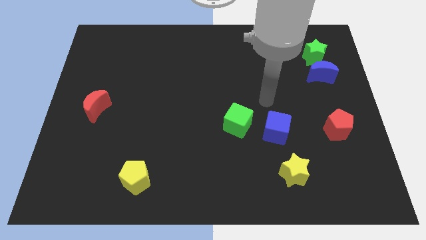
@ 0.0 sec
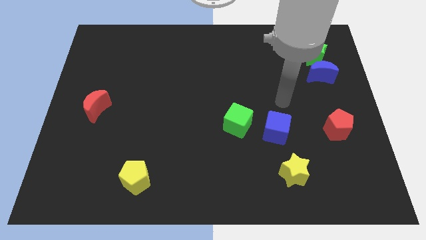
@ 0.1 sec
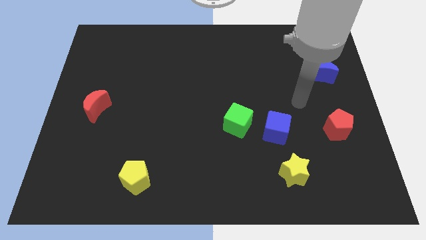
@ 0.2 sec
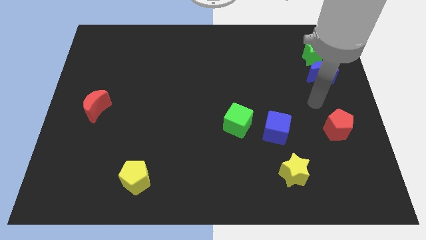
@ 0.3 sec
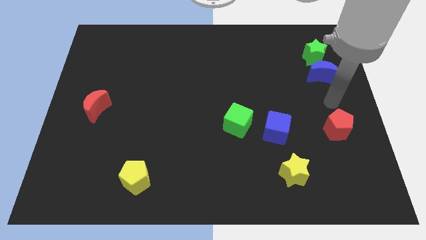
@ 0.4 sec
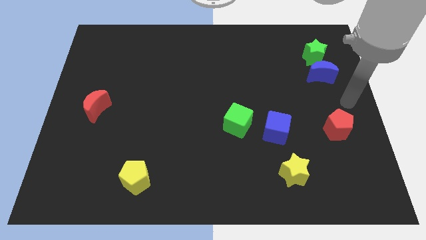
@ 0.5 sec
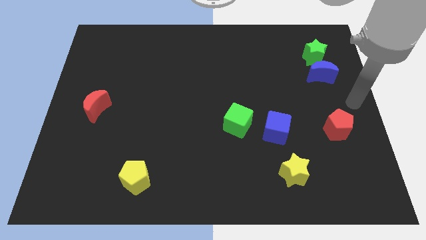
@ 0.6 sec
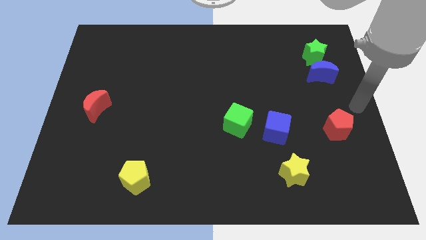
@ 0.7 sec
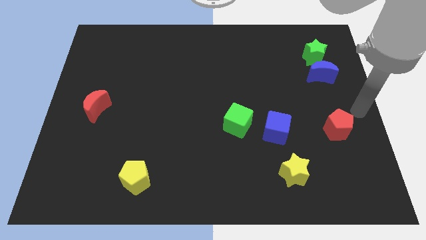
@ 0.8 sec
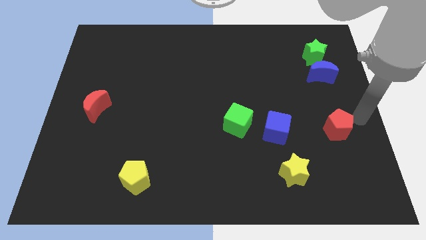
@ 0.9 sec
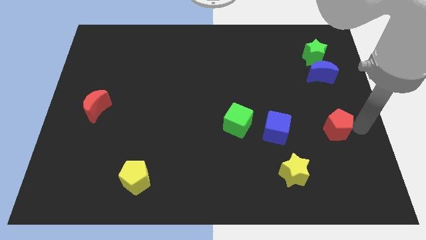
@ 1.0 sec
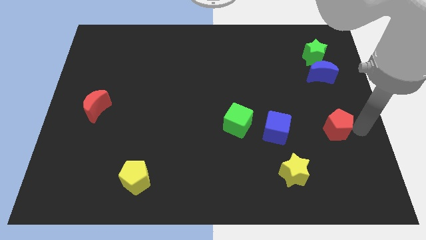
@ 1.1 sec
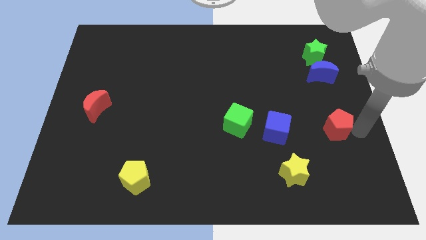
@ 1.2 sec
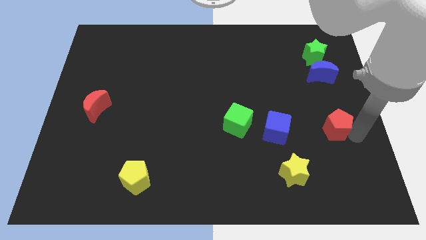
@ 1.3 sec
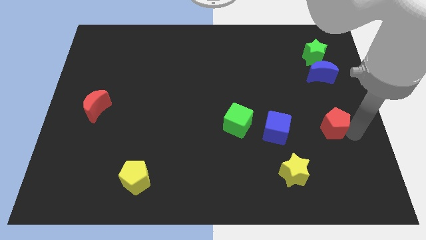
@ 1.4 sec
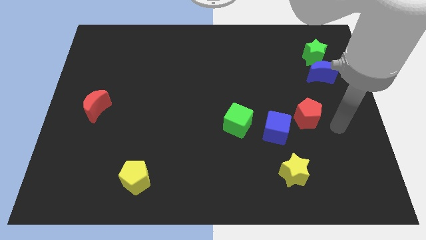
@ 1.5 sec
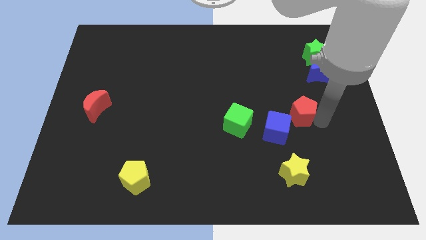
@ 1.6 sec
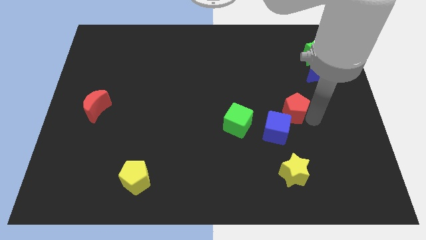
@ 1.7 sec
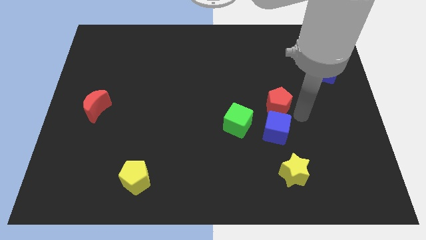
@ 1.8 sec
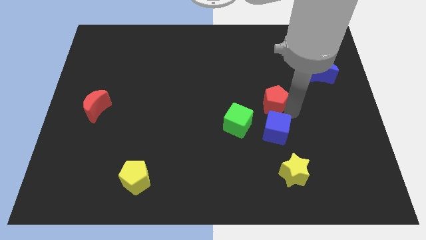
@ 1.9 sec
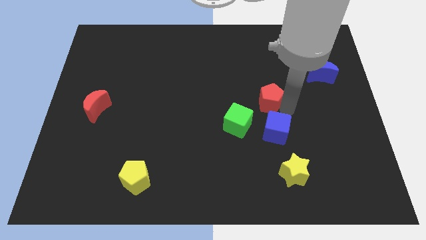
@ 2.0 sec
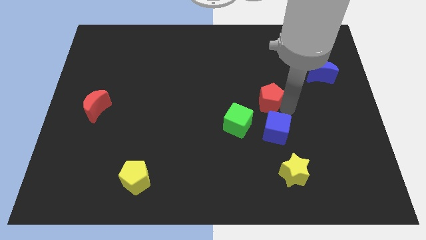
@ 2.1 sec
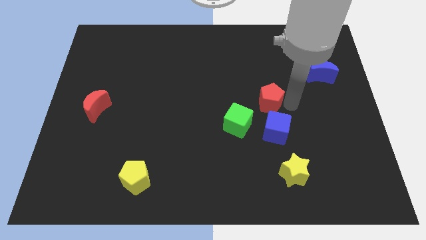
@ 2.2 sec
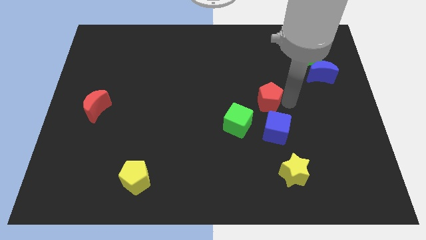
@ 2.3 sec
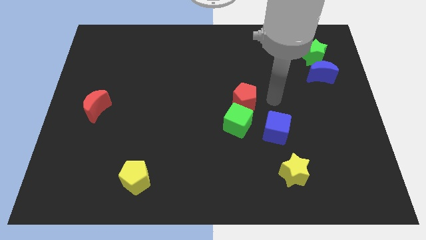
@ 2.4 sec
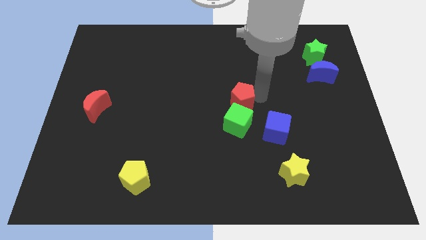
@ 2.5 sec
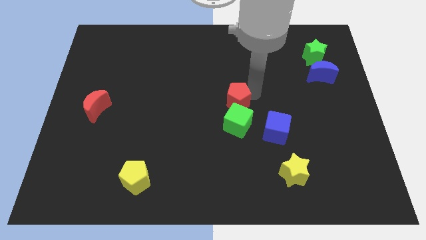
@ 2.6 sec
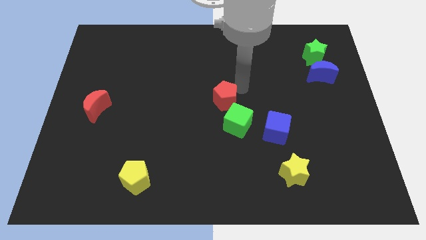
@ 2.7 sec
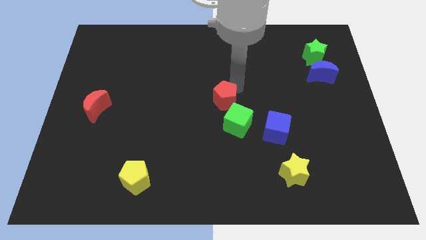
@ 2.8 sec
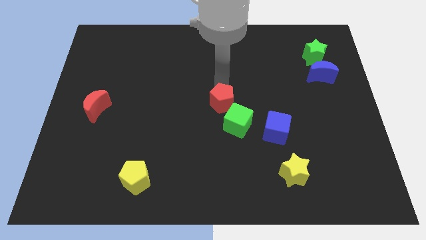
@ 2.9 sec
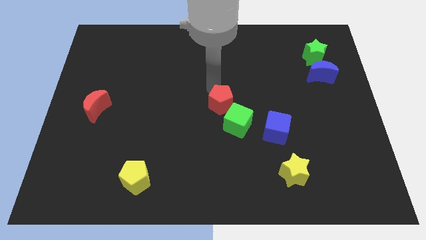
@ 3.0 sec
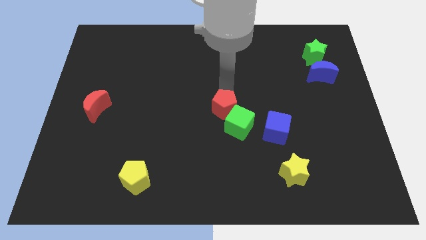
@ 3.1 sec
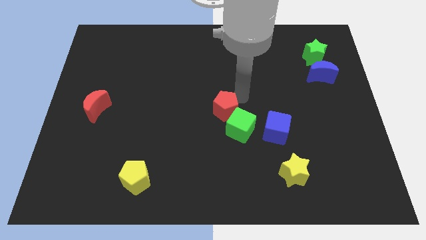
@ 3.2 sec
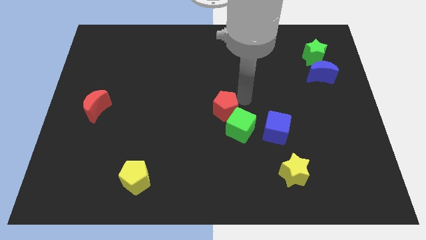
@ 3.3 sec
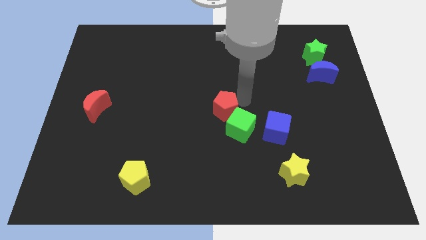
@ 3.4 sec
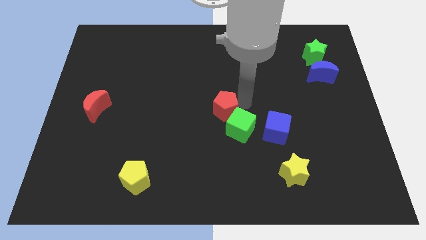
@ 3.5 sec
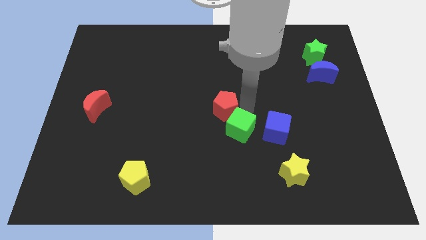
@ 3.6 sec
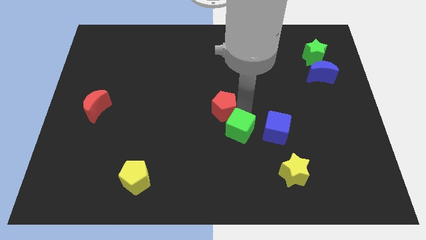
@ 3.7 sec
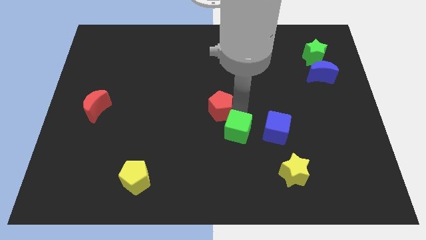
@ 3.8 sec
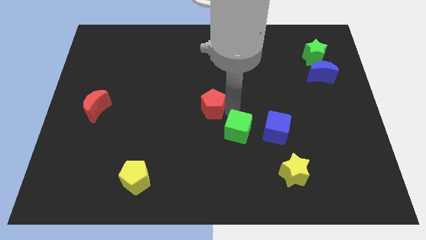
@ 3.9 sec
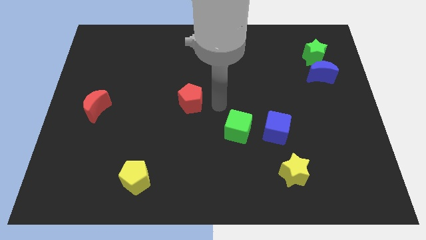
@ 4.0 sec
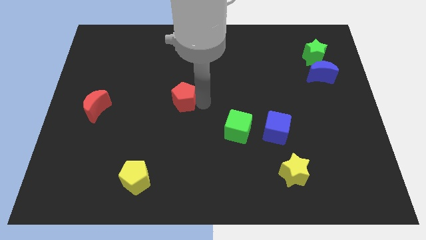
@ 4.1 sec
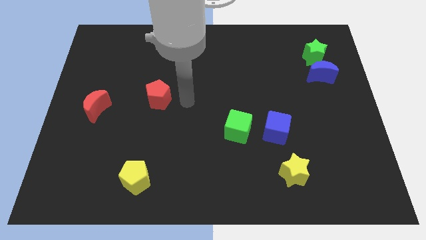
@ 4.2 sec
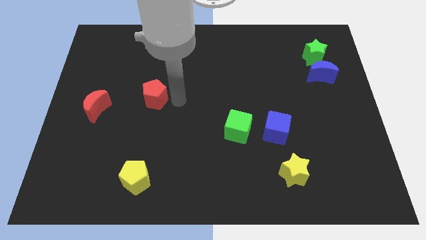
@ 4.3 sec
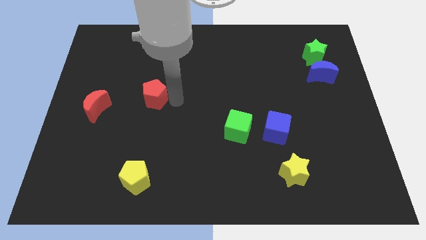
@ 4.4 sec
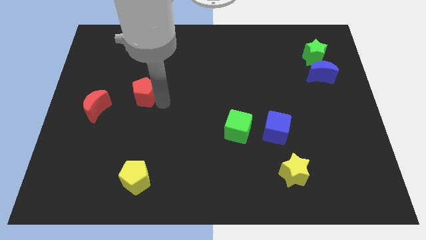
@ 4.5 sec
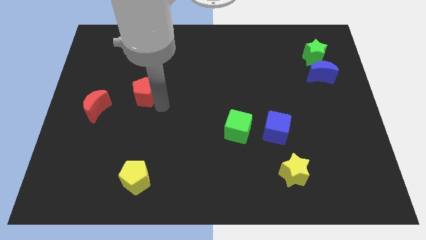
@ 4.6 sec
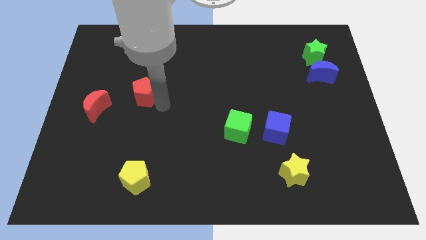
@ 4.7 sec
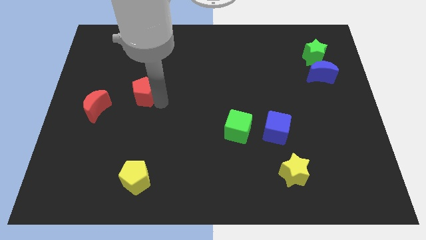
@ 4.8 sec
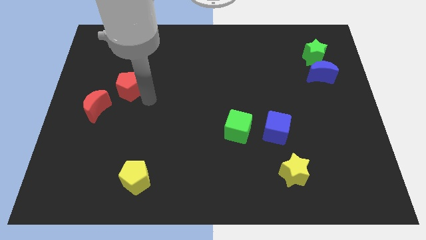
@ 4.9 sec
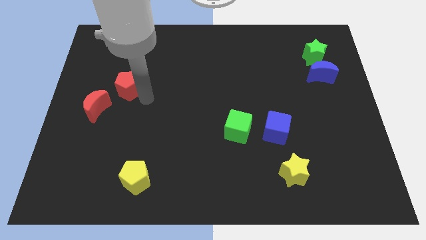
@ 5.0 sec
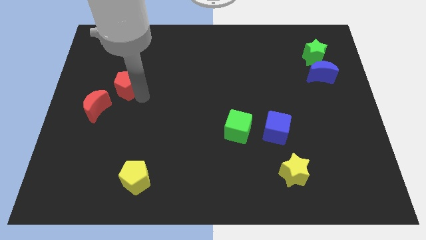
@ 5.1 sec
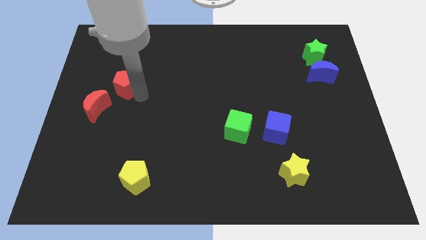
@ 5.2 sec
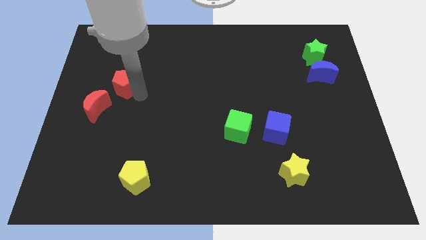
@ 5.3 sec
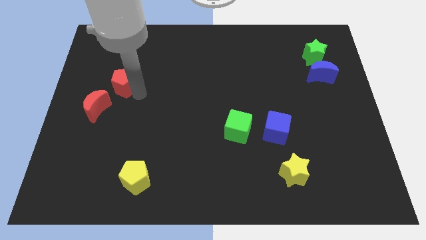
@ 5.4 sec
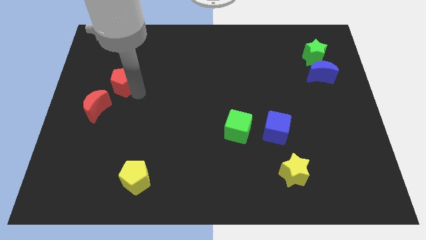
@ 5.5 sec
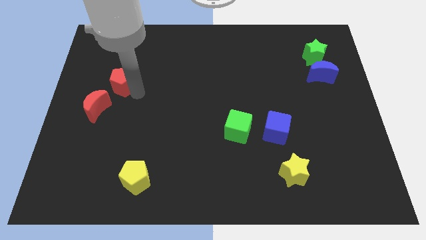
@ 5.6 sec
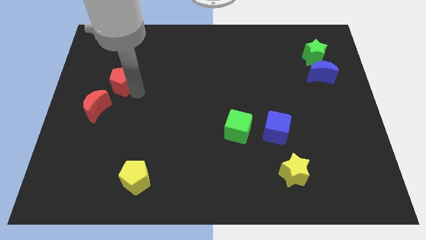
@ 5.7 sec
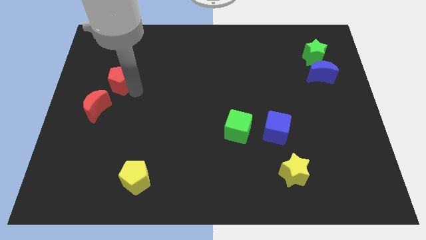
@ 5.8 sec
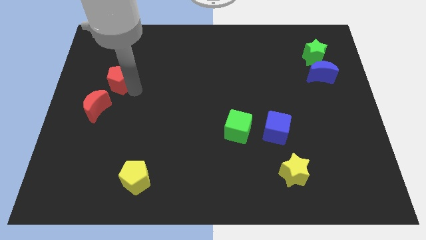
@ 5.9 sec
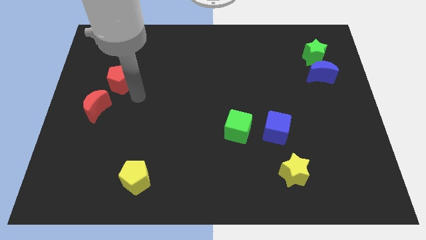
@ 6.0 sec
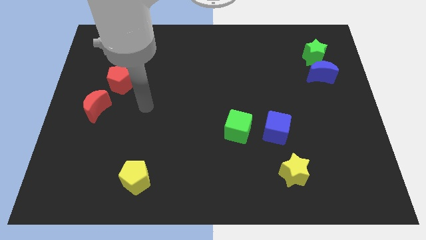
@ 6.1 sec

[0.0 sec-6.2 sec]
place red pentagon to the right of red crescent

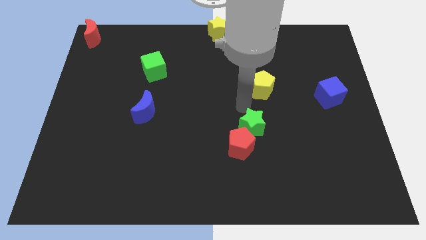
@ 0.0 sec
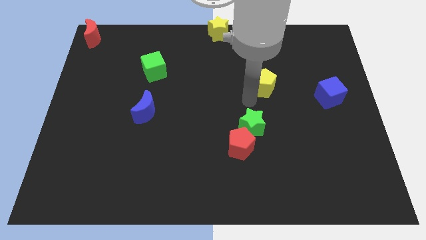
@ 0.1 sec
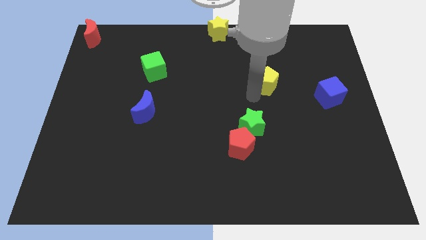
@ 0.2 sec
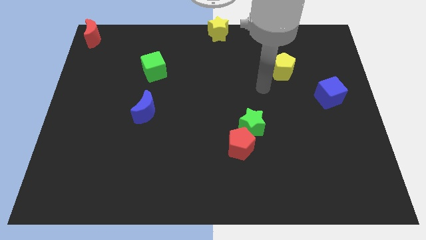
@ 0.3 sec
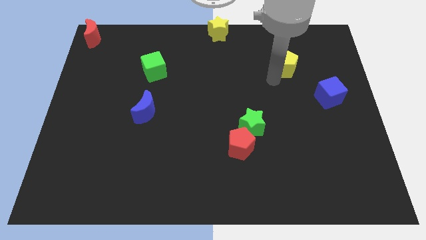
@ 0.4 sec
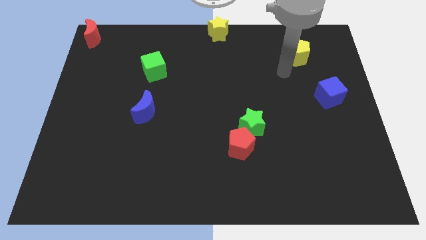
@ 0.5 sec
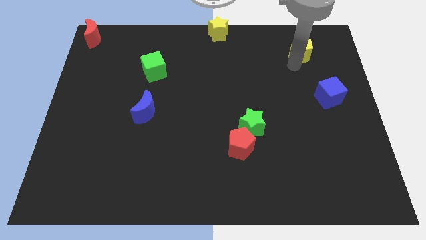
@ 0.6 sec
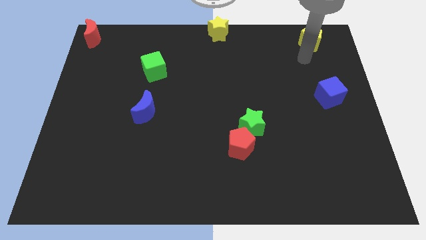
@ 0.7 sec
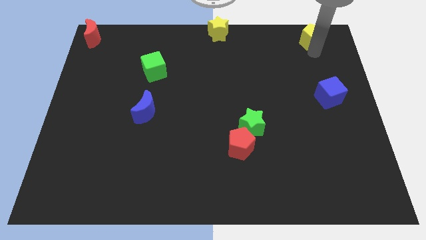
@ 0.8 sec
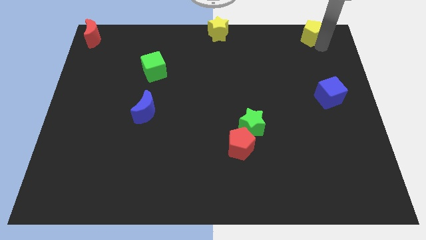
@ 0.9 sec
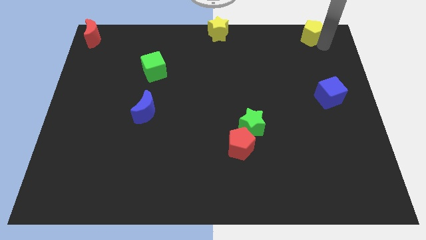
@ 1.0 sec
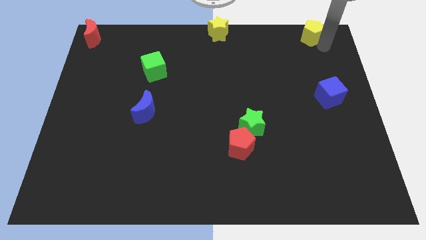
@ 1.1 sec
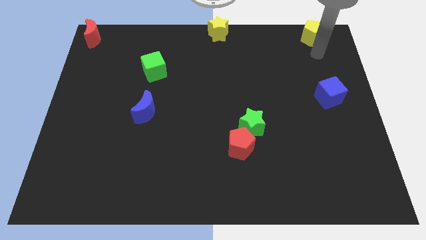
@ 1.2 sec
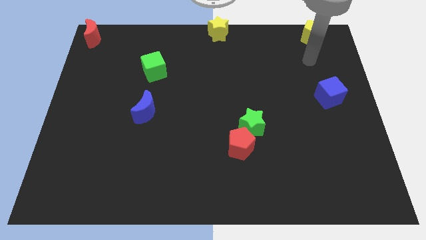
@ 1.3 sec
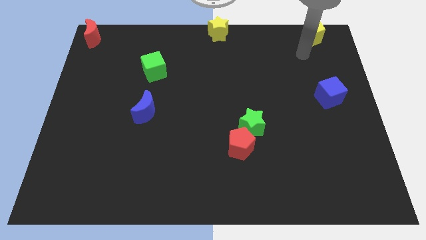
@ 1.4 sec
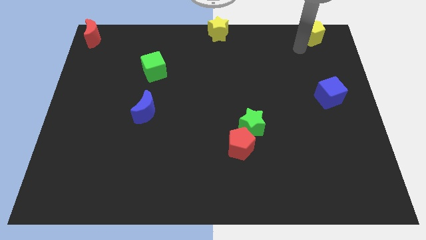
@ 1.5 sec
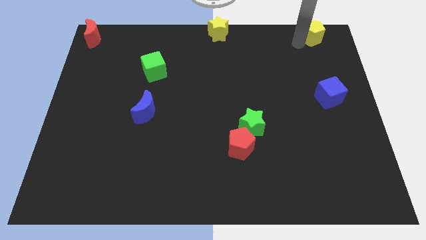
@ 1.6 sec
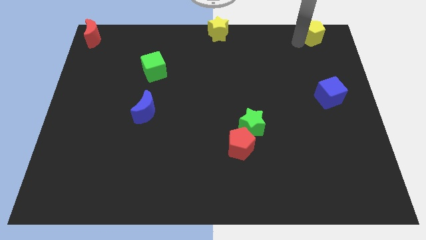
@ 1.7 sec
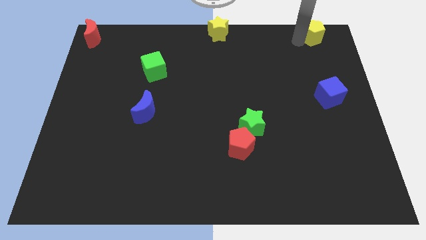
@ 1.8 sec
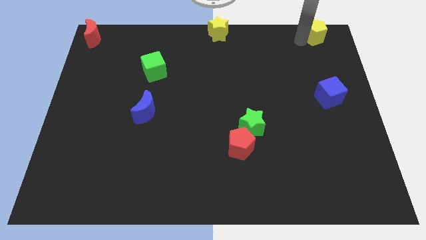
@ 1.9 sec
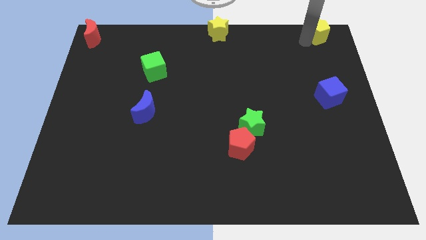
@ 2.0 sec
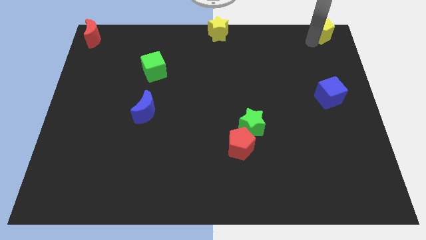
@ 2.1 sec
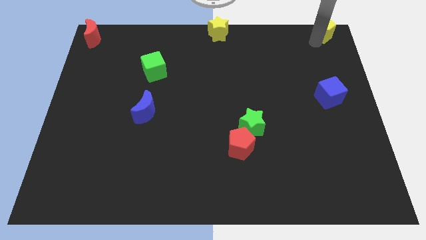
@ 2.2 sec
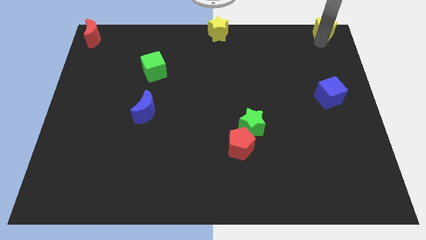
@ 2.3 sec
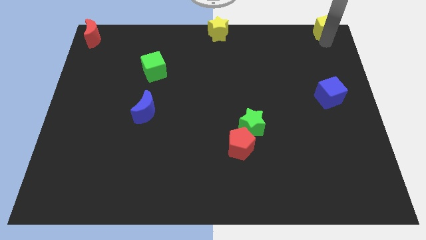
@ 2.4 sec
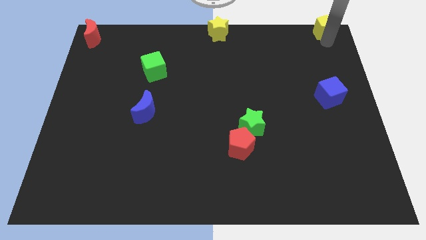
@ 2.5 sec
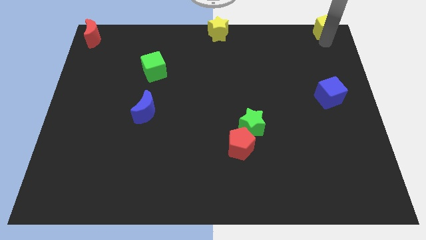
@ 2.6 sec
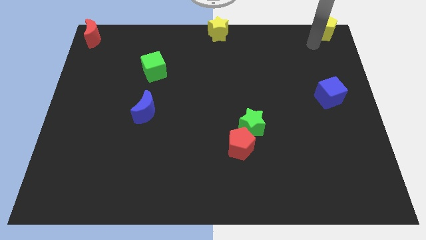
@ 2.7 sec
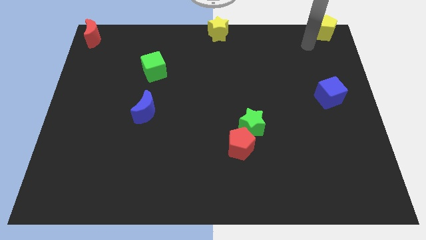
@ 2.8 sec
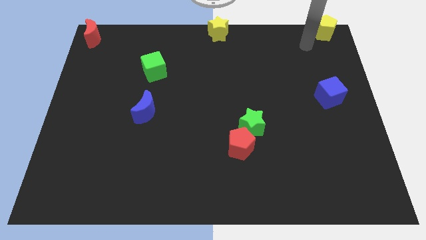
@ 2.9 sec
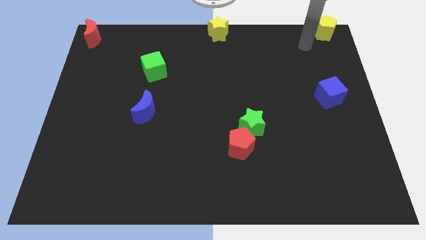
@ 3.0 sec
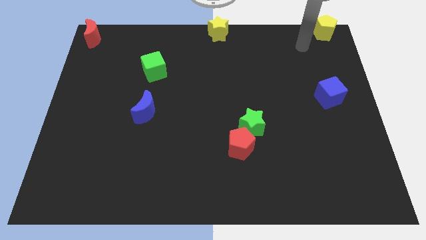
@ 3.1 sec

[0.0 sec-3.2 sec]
move yellow pentagon to form a line
